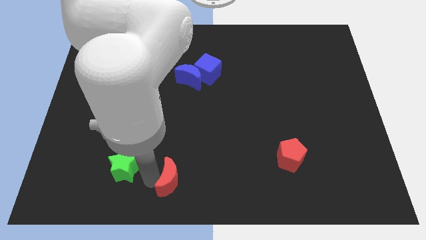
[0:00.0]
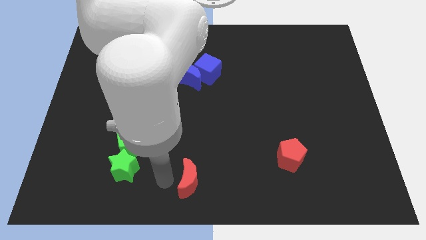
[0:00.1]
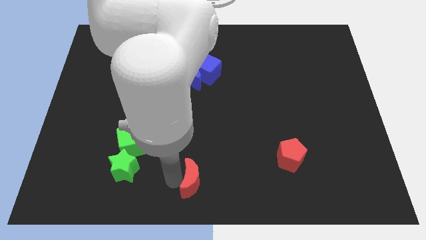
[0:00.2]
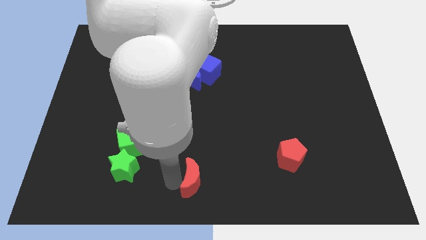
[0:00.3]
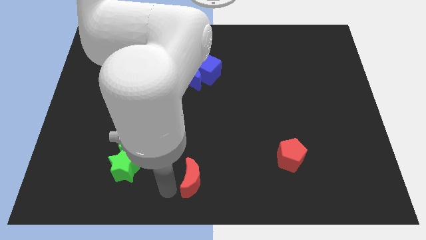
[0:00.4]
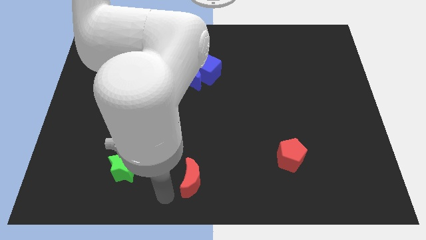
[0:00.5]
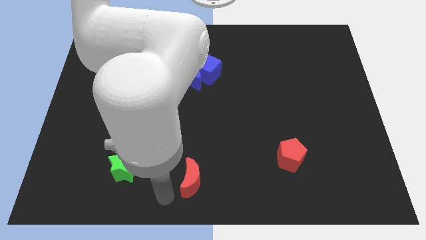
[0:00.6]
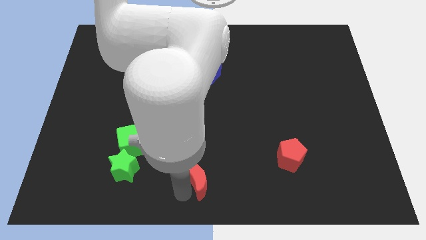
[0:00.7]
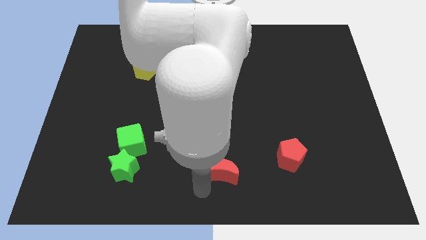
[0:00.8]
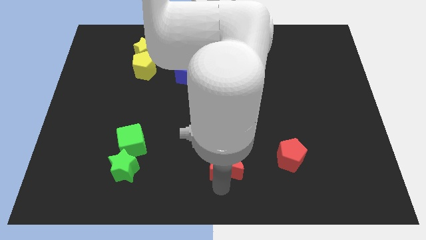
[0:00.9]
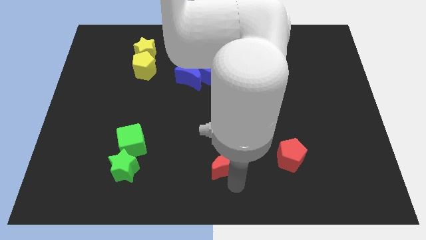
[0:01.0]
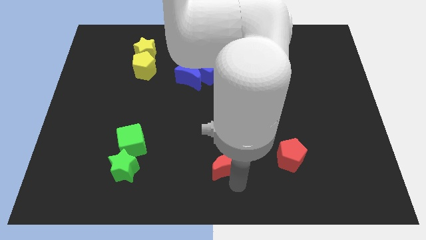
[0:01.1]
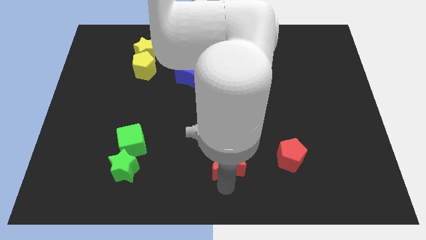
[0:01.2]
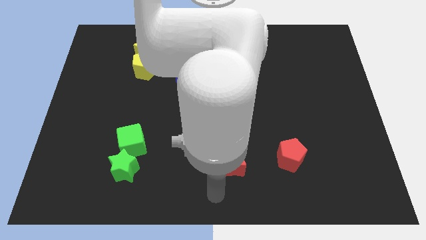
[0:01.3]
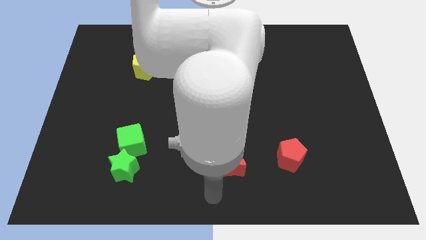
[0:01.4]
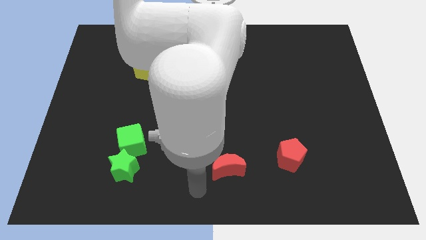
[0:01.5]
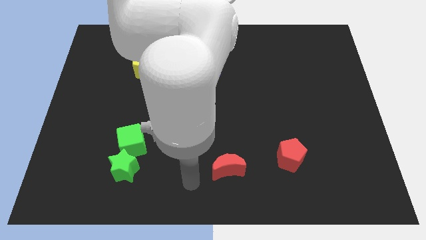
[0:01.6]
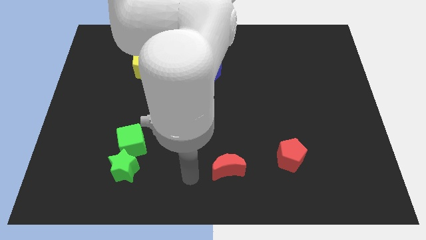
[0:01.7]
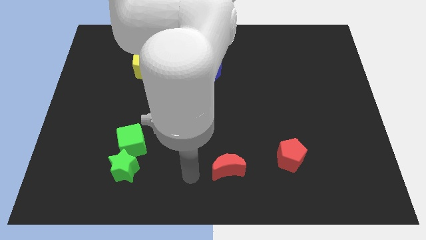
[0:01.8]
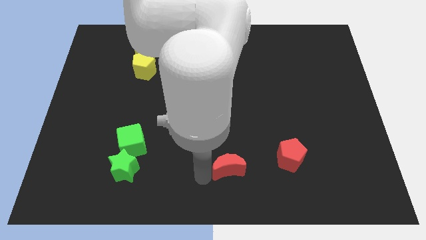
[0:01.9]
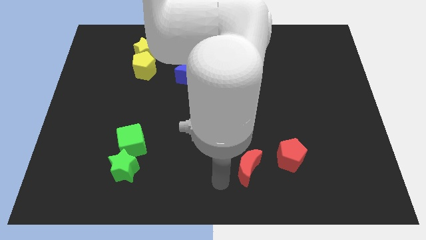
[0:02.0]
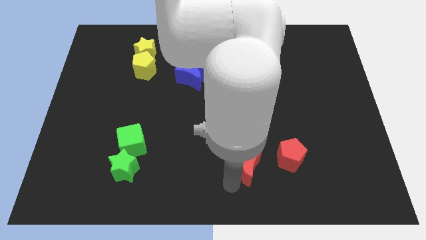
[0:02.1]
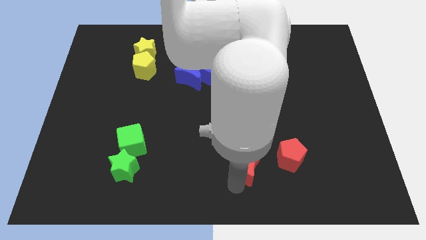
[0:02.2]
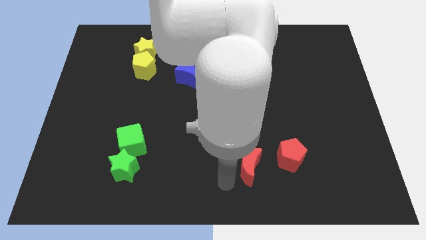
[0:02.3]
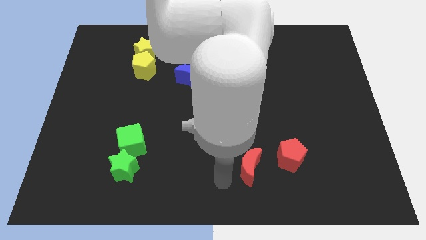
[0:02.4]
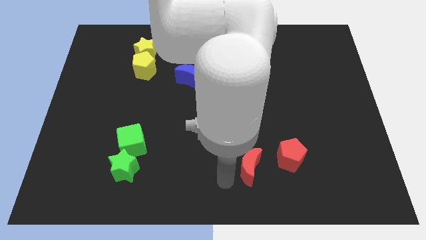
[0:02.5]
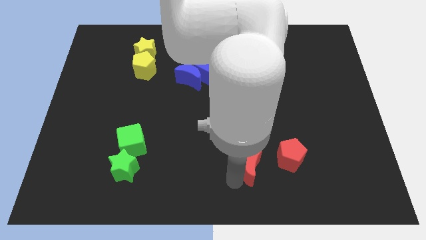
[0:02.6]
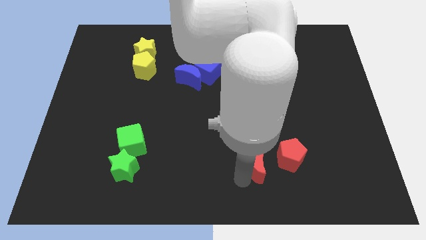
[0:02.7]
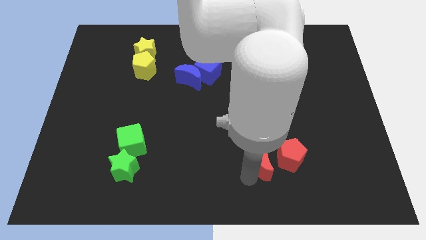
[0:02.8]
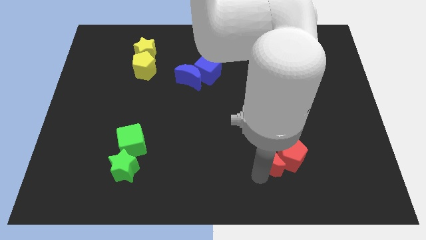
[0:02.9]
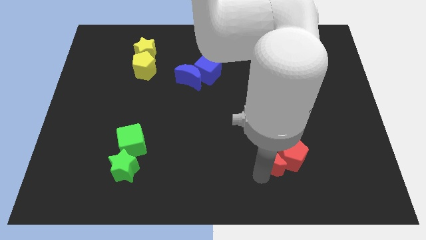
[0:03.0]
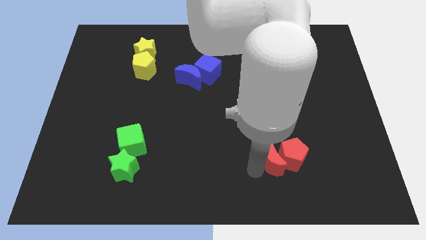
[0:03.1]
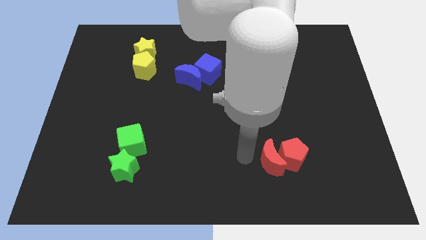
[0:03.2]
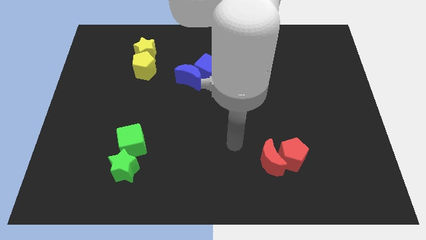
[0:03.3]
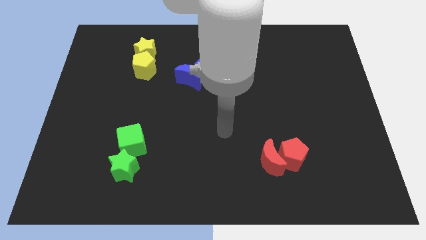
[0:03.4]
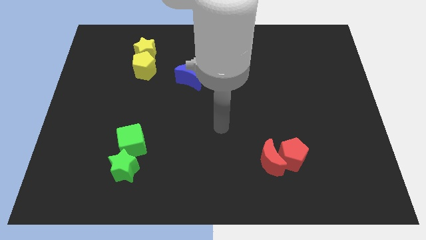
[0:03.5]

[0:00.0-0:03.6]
push the red crescent towards the red pentagon

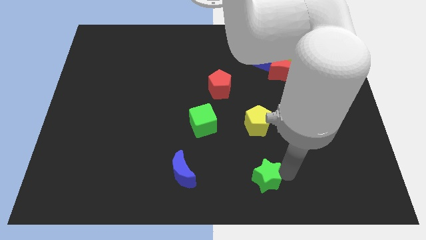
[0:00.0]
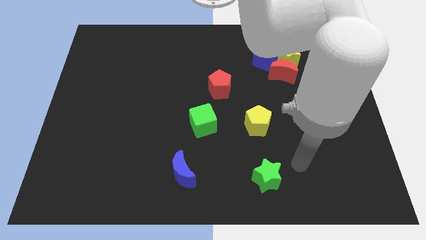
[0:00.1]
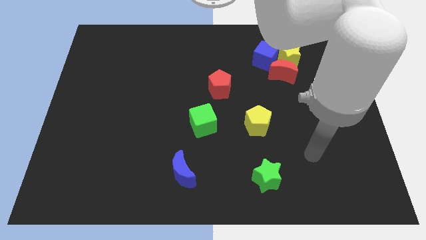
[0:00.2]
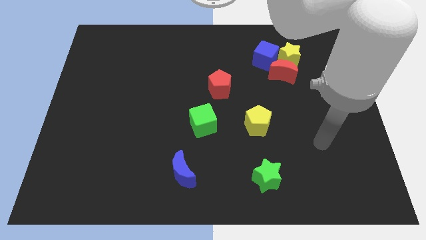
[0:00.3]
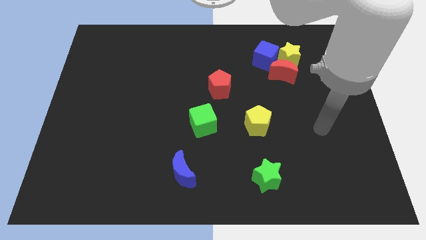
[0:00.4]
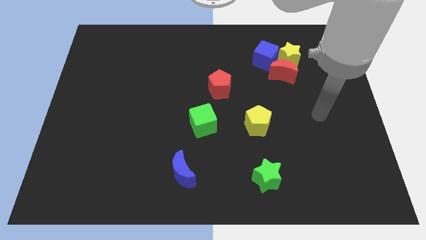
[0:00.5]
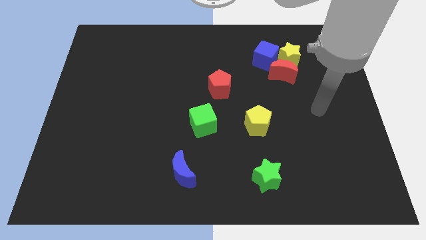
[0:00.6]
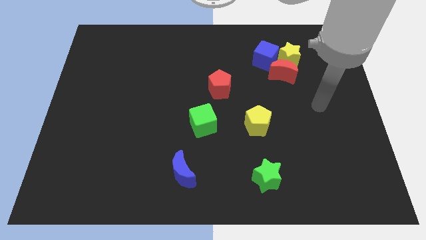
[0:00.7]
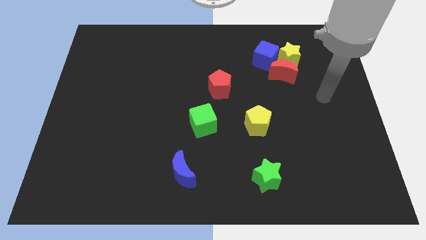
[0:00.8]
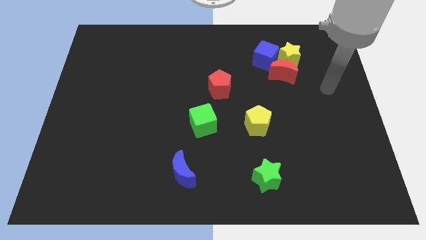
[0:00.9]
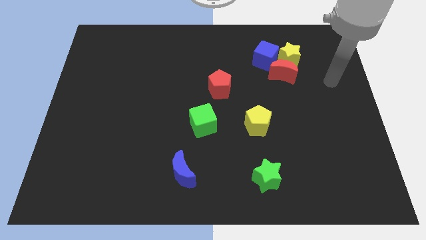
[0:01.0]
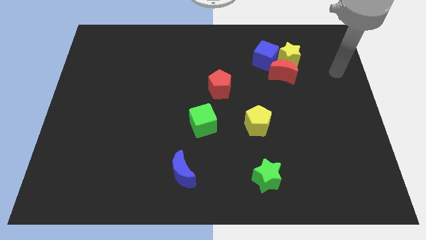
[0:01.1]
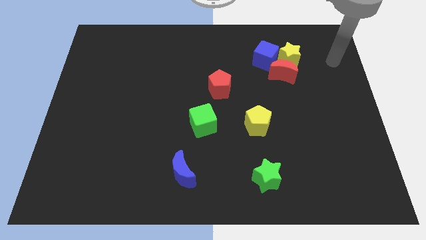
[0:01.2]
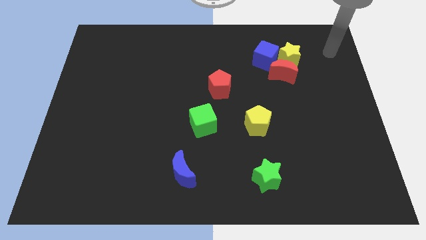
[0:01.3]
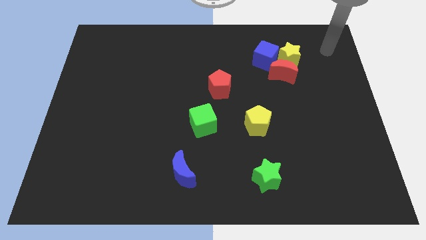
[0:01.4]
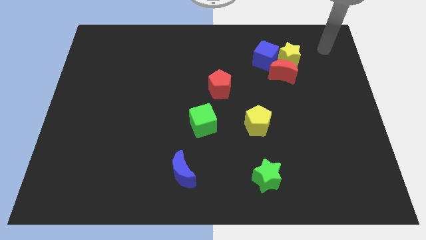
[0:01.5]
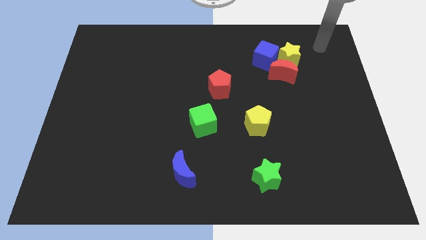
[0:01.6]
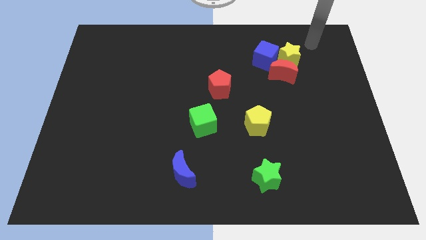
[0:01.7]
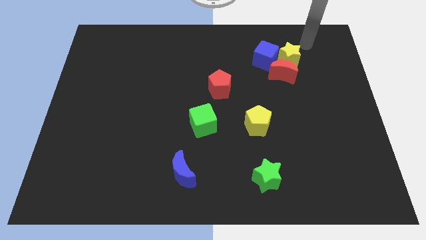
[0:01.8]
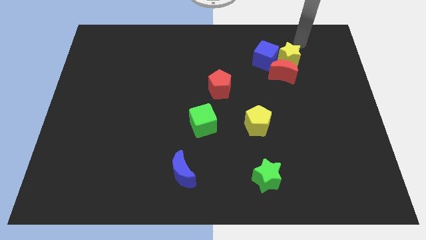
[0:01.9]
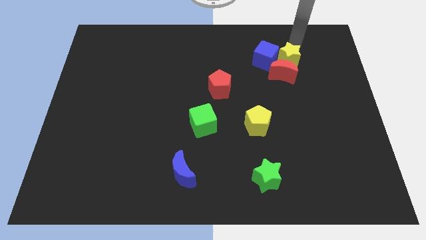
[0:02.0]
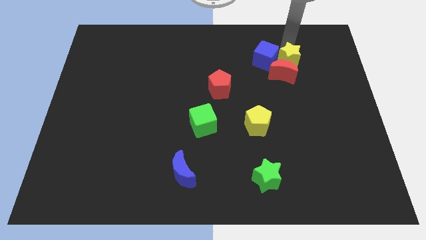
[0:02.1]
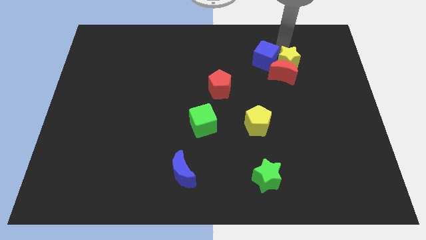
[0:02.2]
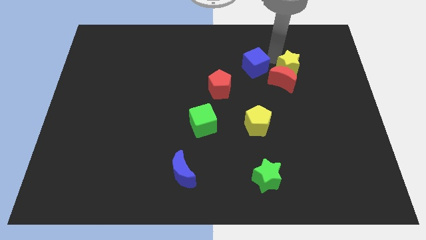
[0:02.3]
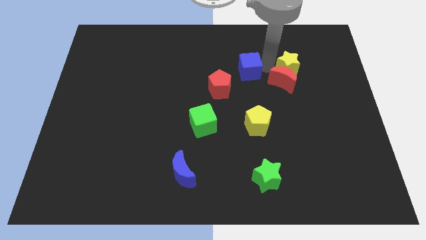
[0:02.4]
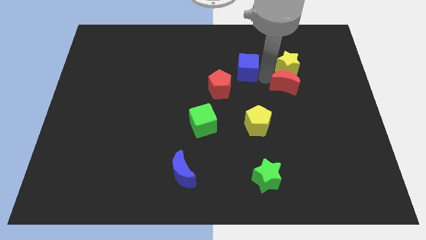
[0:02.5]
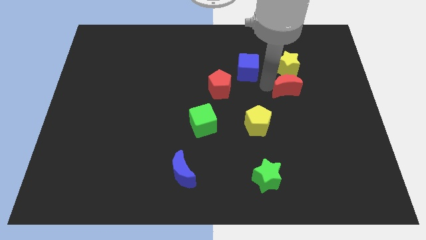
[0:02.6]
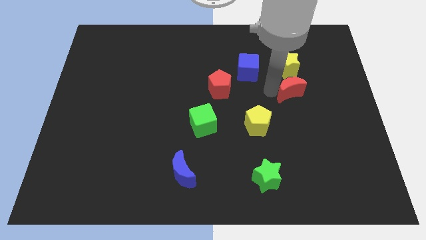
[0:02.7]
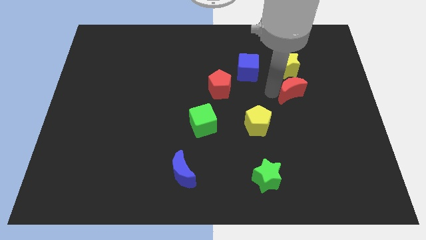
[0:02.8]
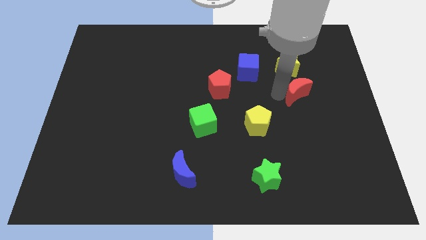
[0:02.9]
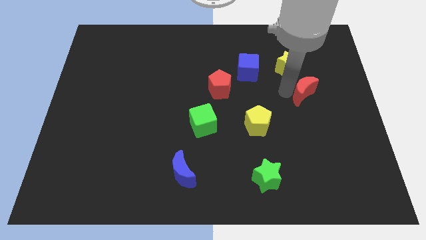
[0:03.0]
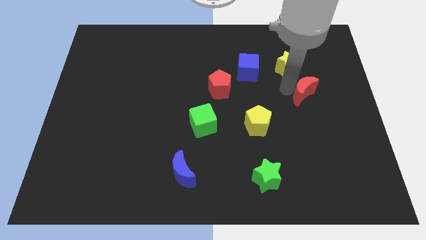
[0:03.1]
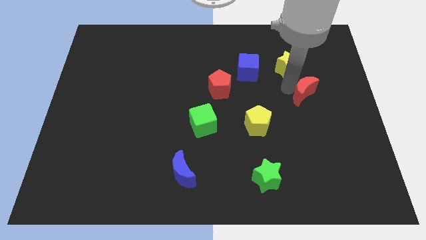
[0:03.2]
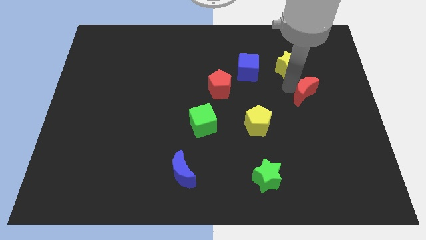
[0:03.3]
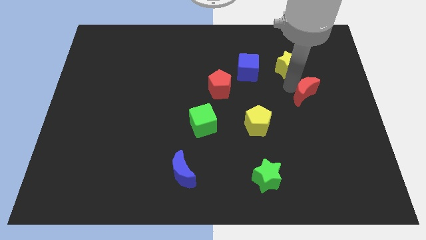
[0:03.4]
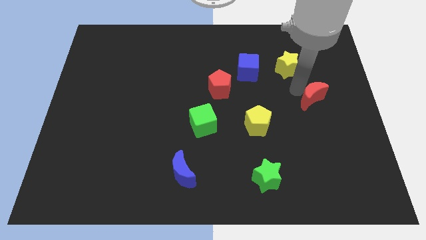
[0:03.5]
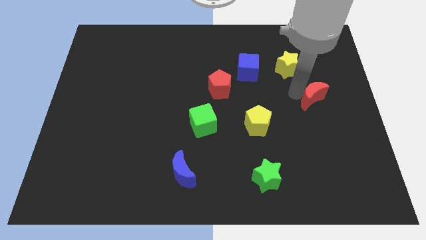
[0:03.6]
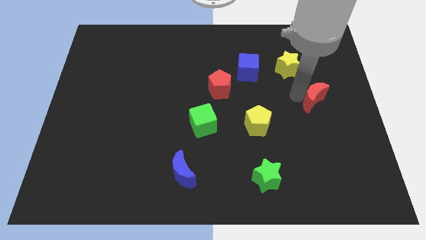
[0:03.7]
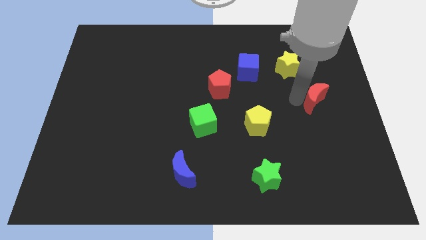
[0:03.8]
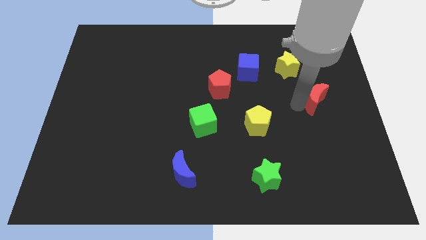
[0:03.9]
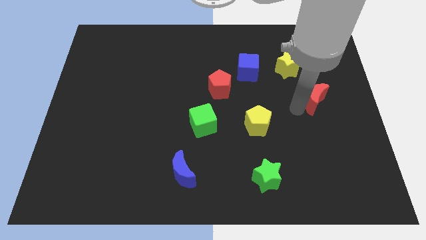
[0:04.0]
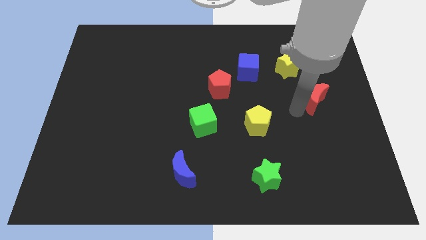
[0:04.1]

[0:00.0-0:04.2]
separate group of blocks

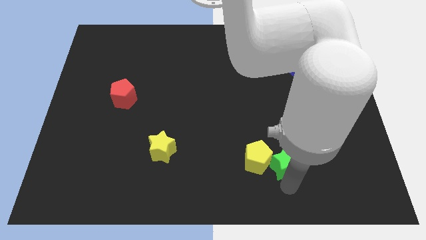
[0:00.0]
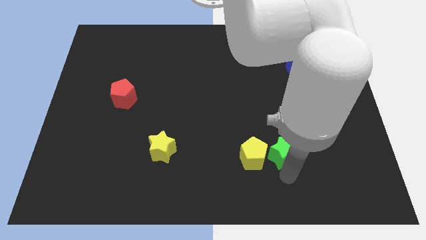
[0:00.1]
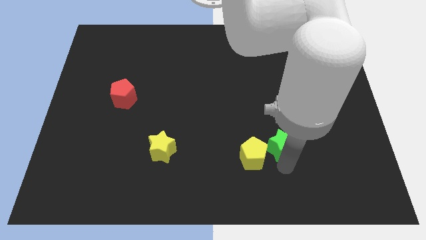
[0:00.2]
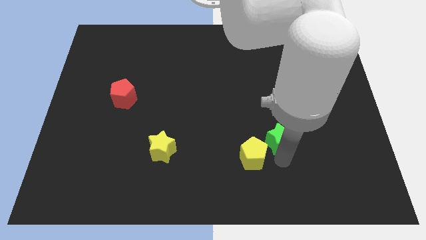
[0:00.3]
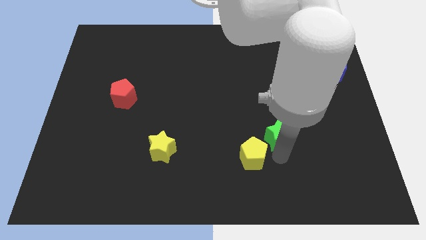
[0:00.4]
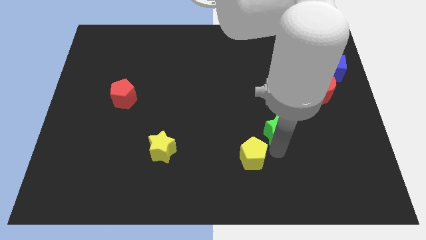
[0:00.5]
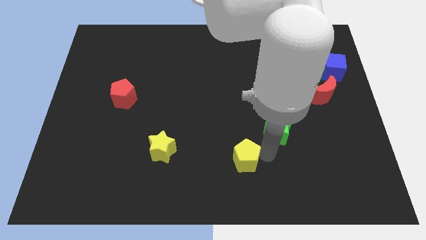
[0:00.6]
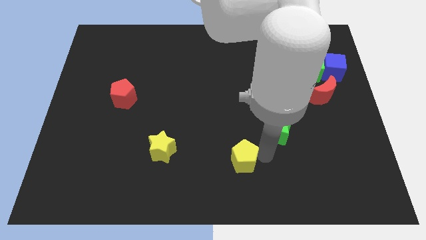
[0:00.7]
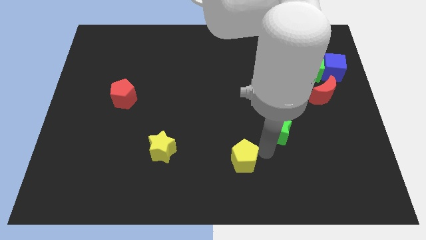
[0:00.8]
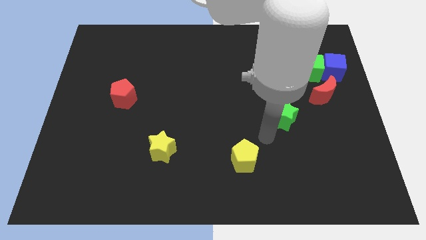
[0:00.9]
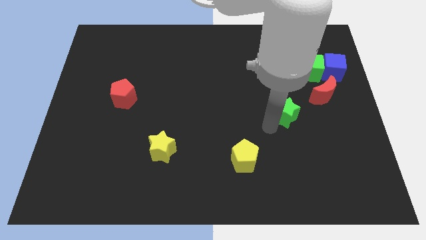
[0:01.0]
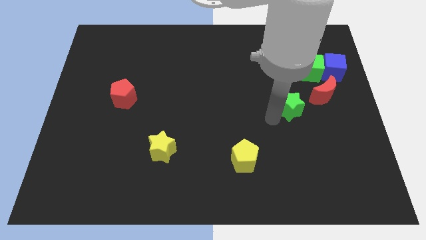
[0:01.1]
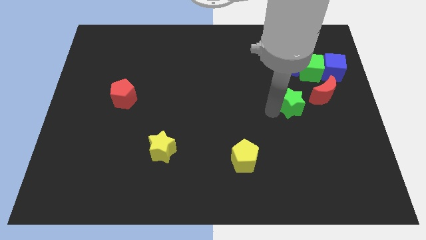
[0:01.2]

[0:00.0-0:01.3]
separate the green star from the yellow pentagon
